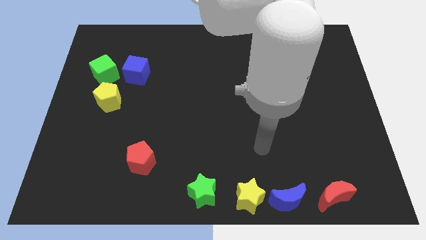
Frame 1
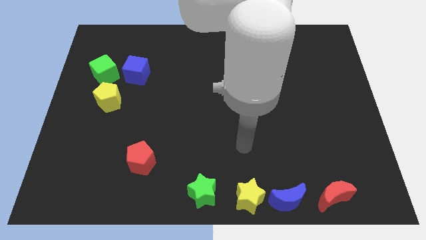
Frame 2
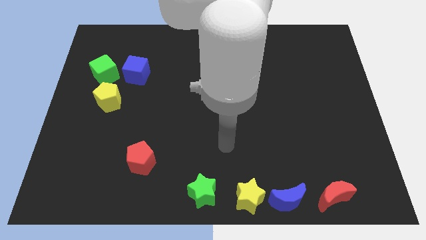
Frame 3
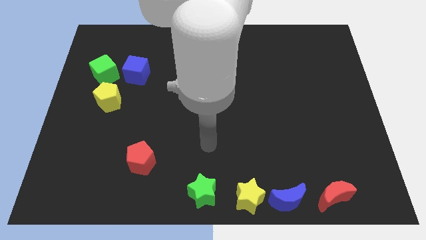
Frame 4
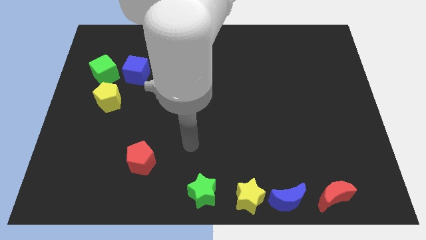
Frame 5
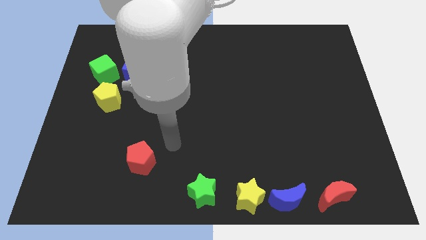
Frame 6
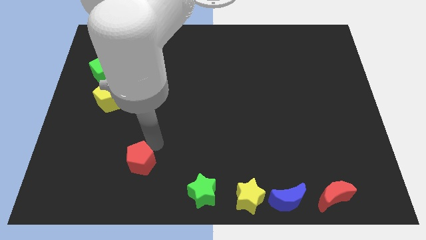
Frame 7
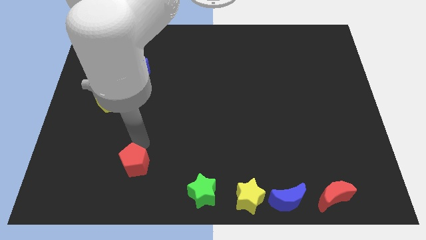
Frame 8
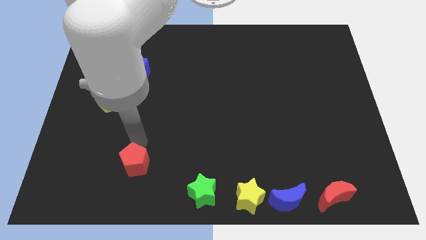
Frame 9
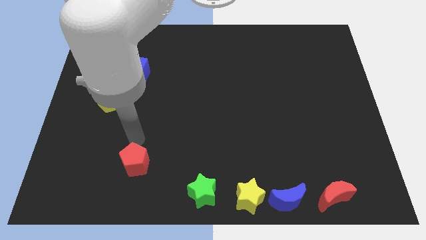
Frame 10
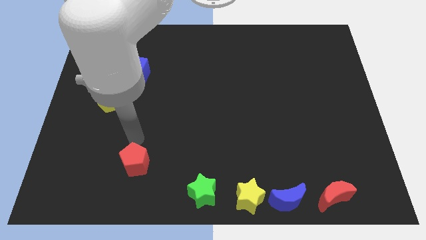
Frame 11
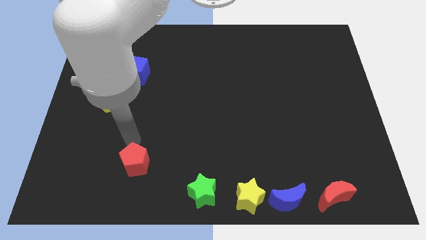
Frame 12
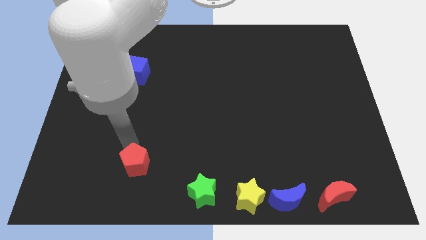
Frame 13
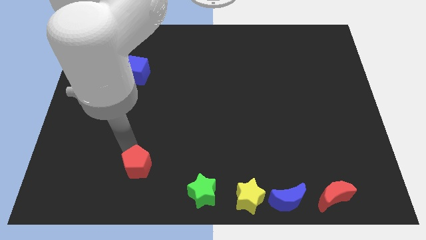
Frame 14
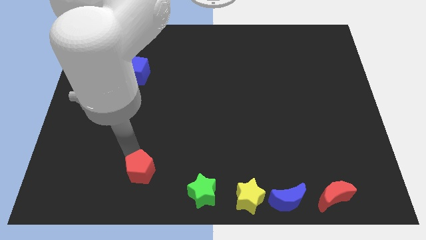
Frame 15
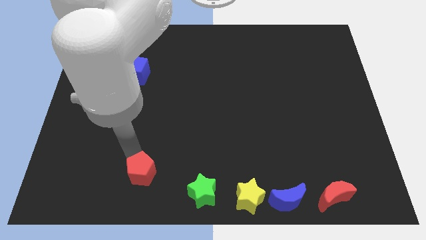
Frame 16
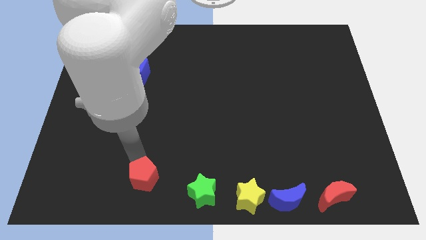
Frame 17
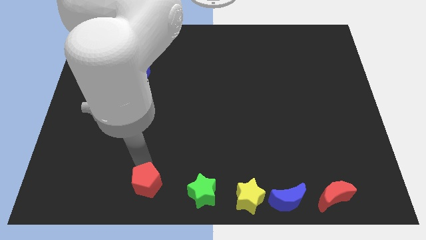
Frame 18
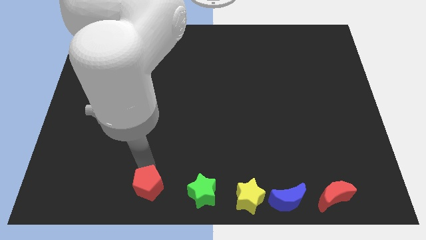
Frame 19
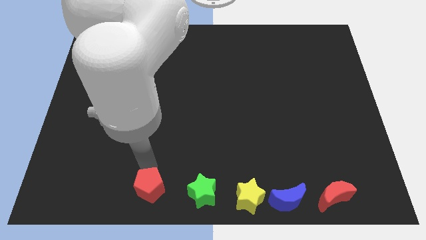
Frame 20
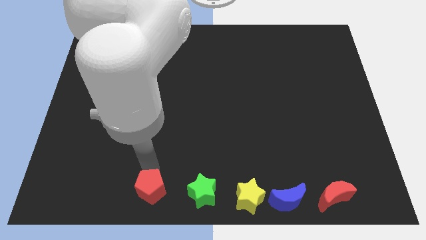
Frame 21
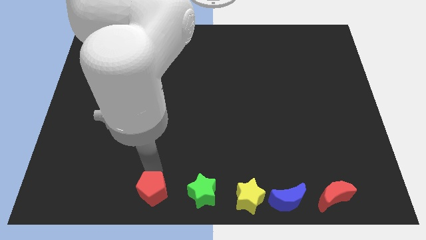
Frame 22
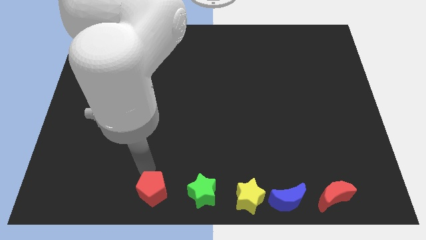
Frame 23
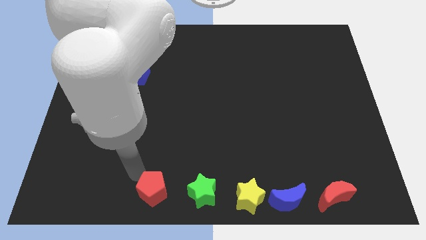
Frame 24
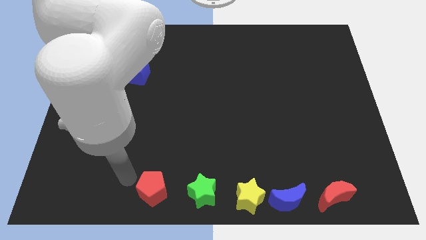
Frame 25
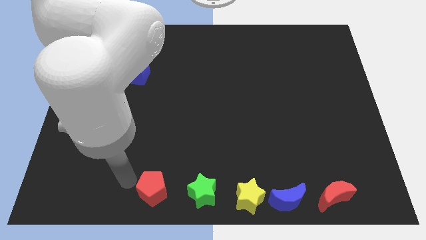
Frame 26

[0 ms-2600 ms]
push the red pentagon at the bottom of the board beside green star

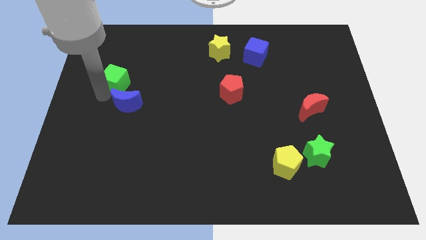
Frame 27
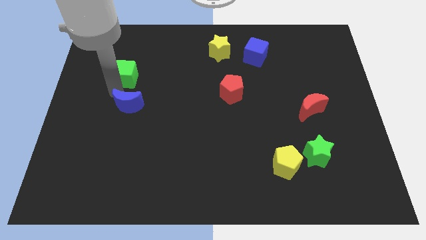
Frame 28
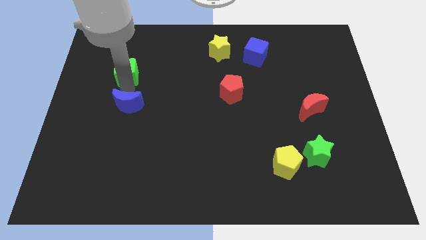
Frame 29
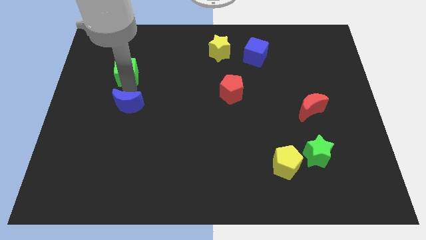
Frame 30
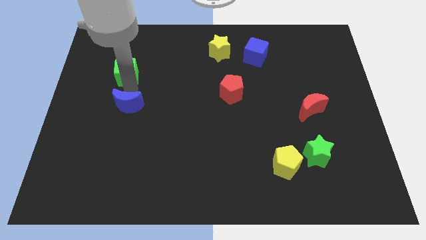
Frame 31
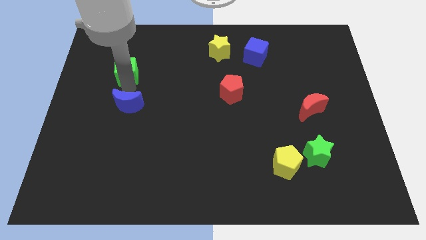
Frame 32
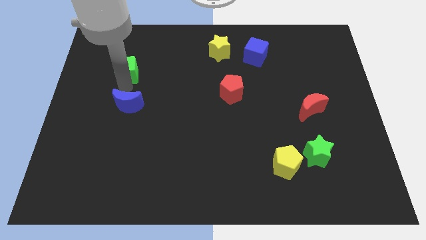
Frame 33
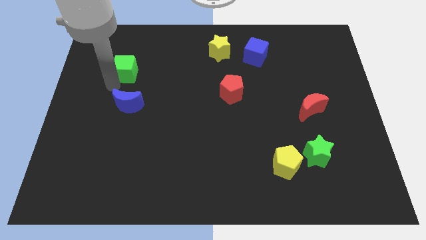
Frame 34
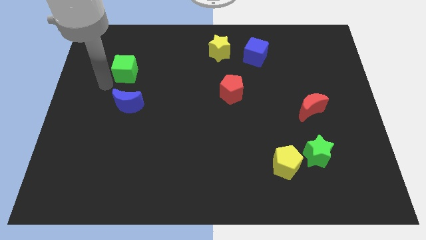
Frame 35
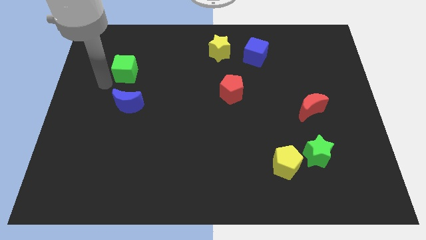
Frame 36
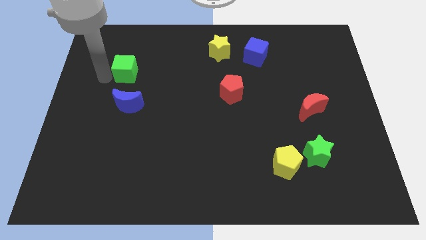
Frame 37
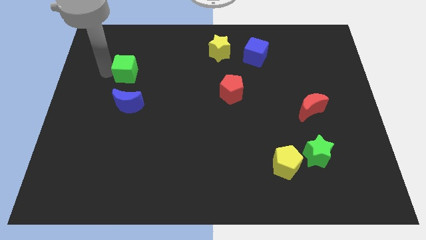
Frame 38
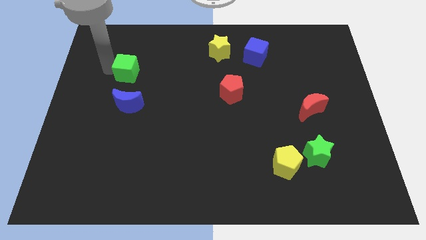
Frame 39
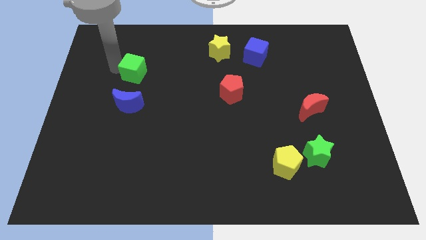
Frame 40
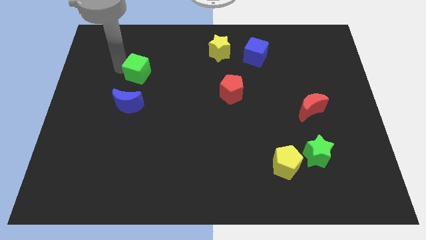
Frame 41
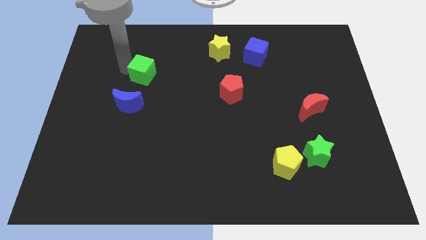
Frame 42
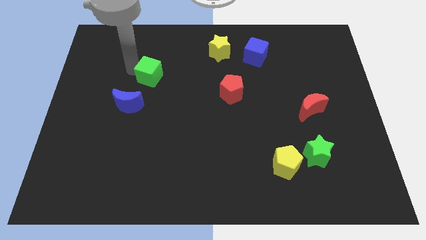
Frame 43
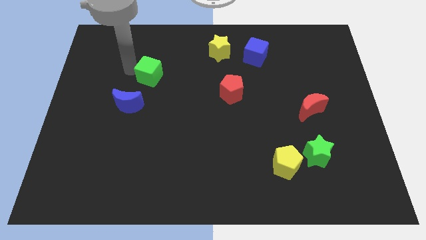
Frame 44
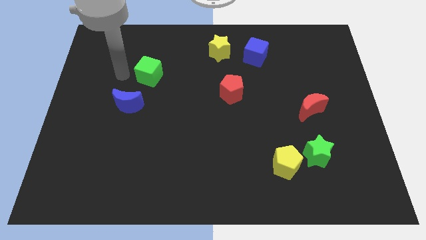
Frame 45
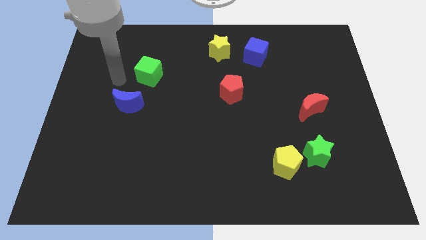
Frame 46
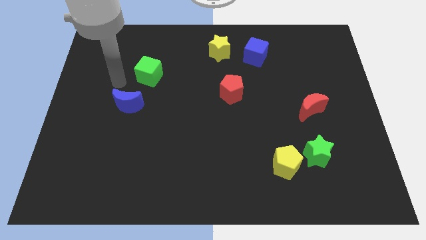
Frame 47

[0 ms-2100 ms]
move green cube apart from blue crescent

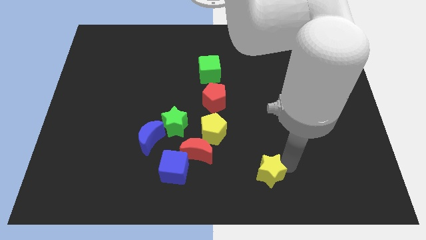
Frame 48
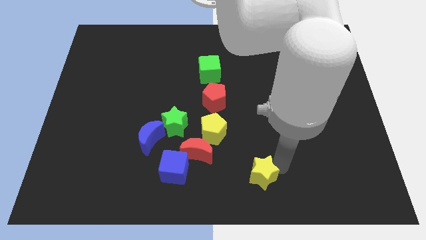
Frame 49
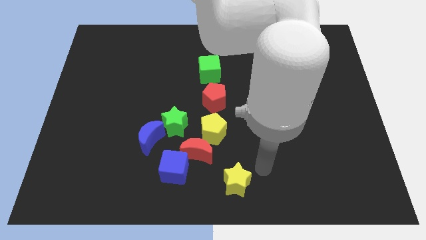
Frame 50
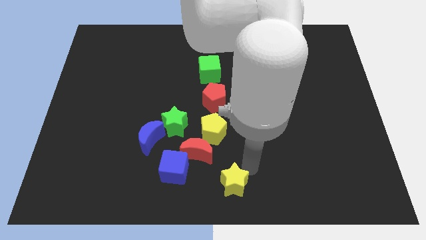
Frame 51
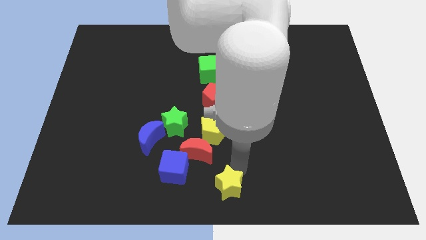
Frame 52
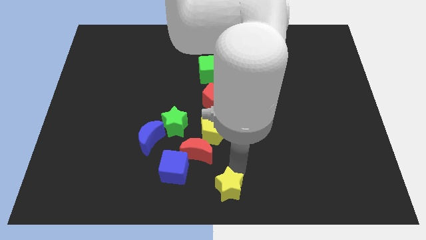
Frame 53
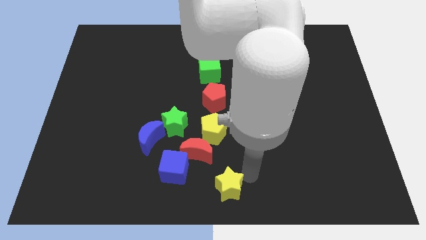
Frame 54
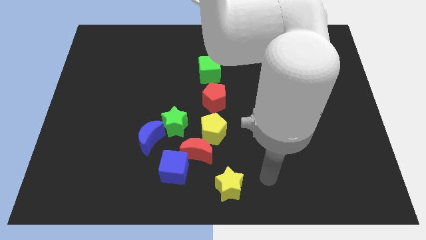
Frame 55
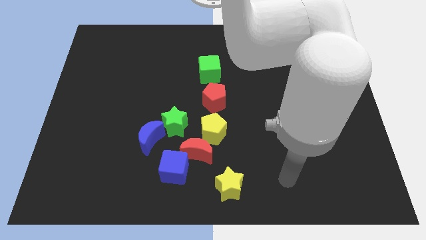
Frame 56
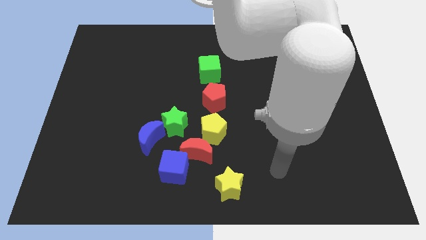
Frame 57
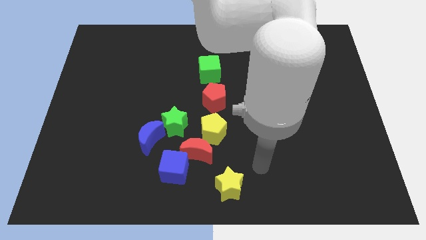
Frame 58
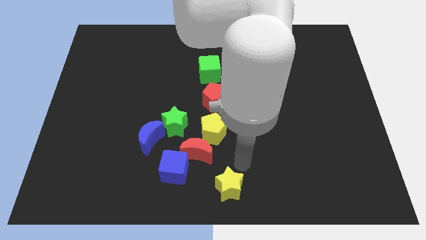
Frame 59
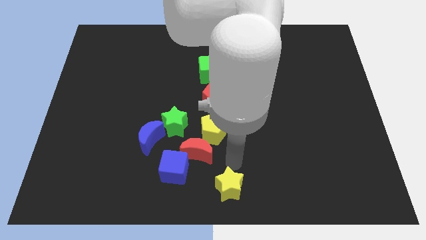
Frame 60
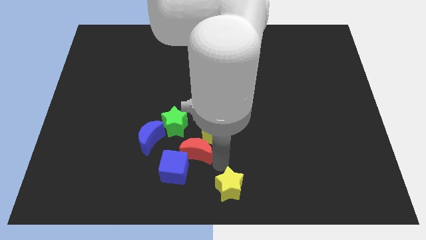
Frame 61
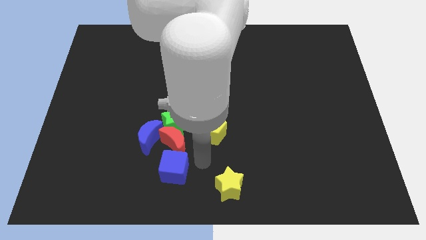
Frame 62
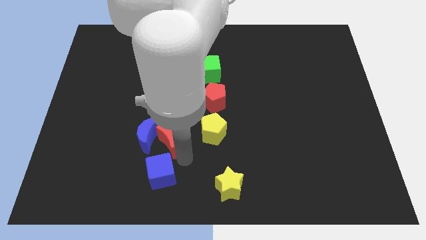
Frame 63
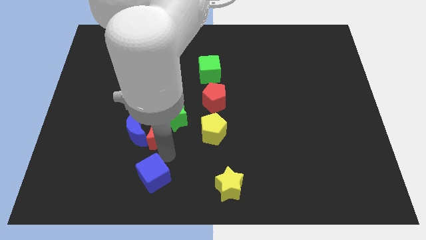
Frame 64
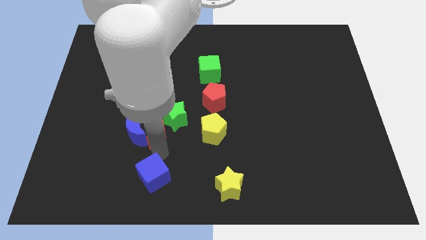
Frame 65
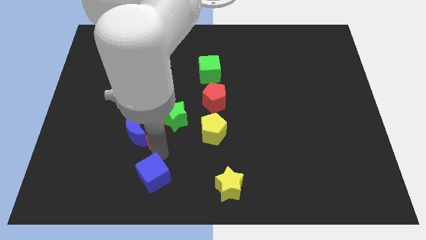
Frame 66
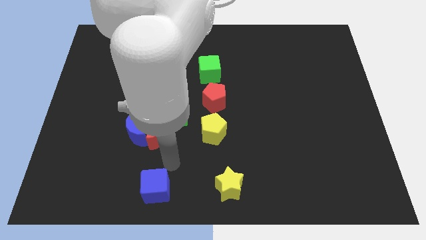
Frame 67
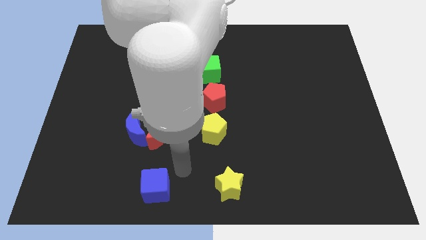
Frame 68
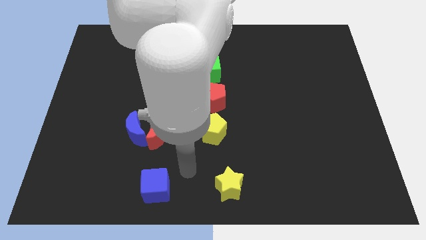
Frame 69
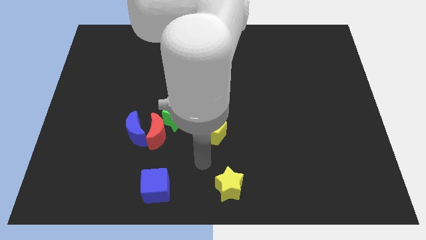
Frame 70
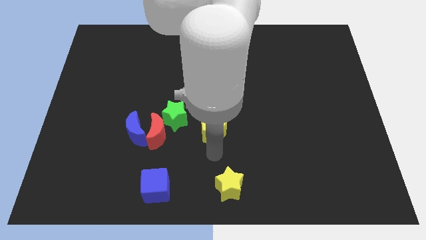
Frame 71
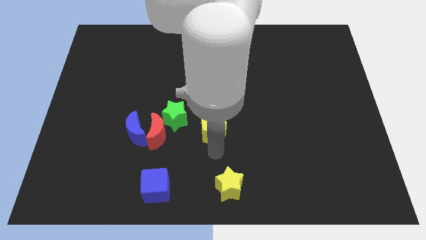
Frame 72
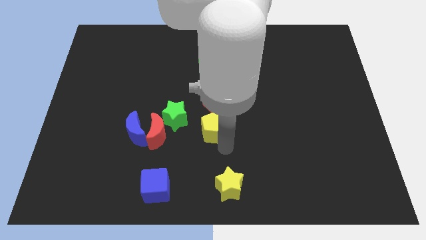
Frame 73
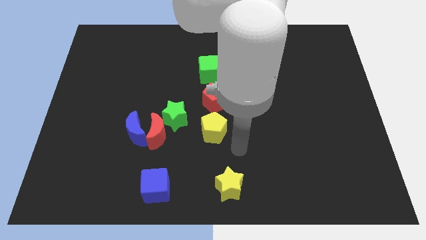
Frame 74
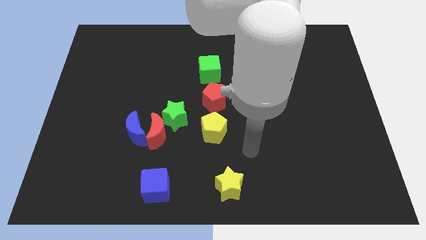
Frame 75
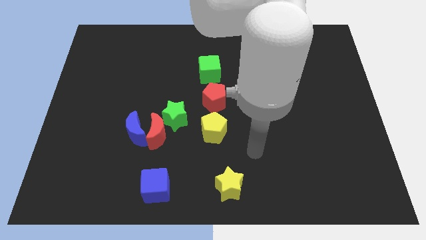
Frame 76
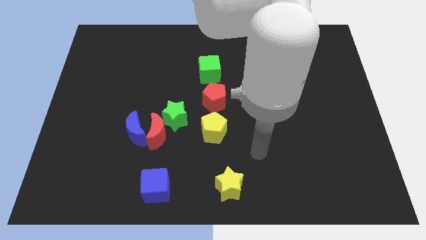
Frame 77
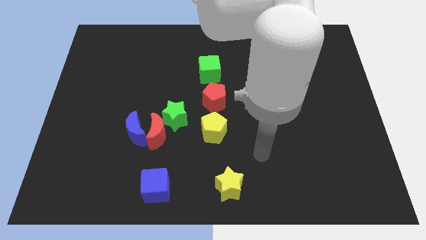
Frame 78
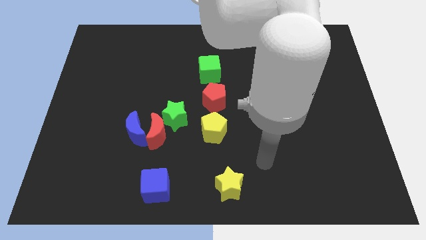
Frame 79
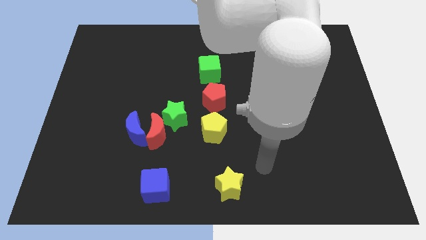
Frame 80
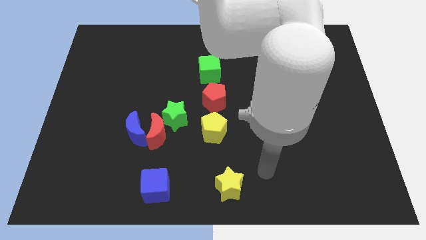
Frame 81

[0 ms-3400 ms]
push yellow star and blue cube parallel to each other

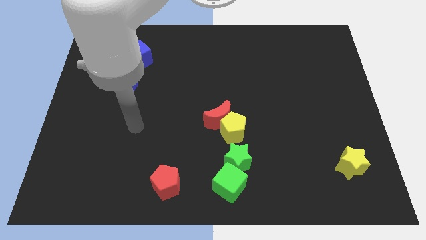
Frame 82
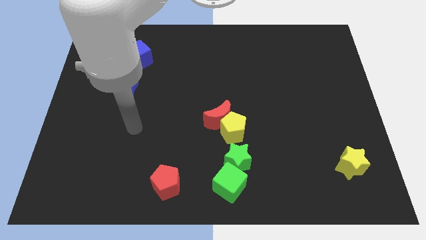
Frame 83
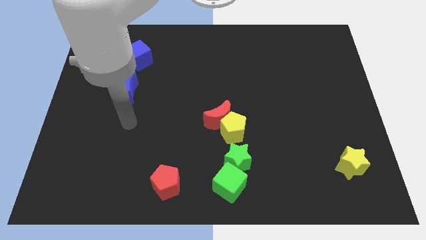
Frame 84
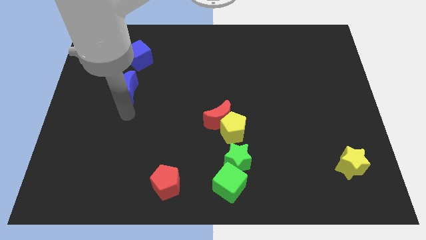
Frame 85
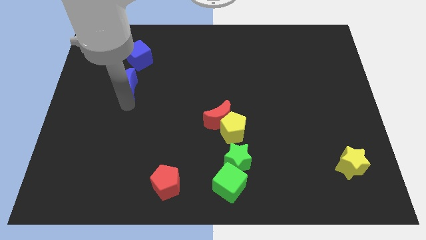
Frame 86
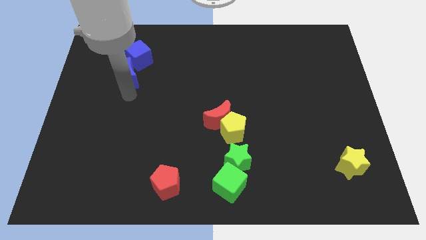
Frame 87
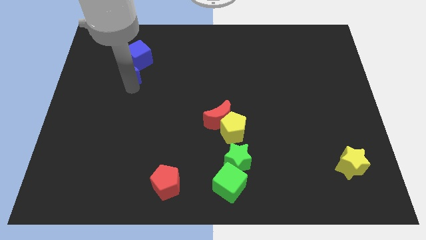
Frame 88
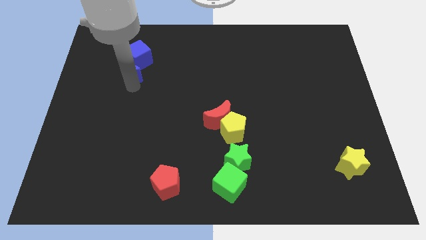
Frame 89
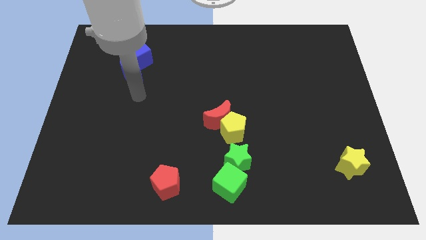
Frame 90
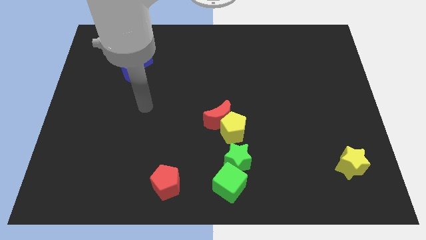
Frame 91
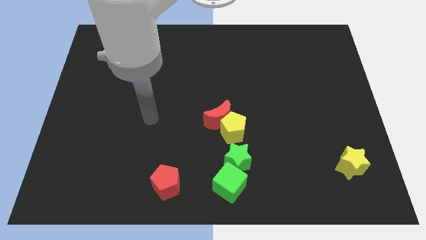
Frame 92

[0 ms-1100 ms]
move the arm away from blue crescent
